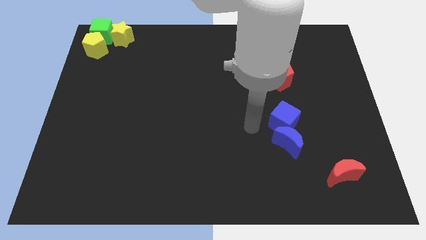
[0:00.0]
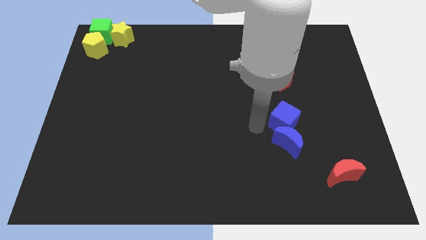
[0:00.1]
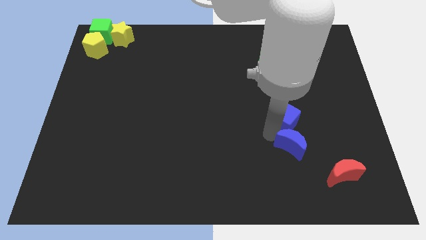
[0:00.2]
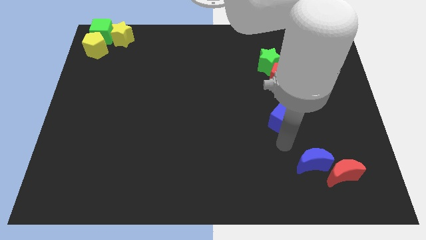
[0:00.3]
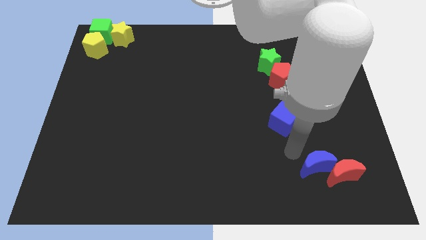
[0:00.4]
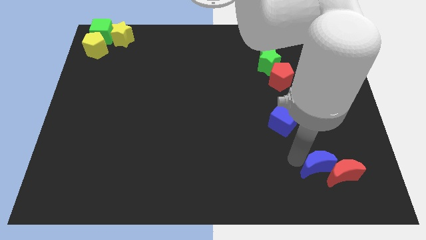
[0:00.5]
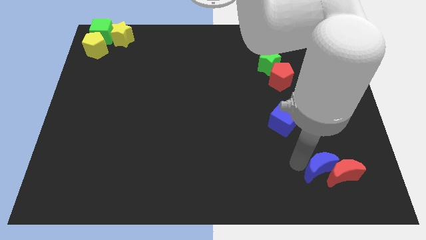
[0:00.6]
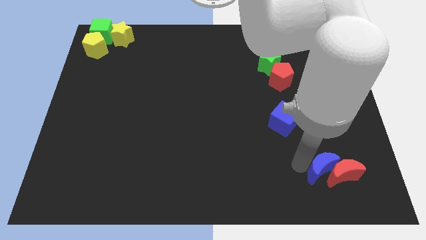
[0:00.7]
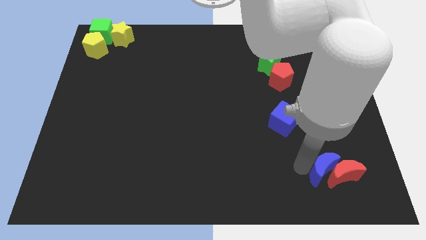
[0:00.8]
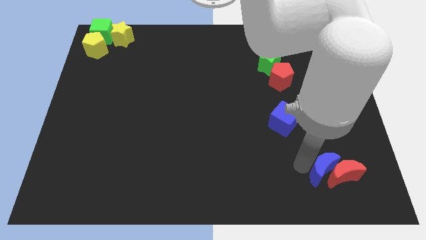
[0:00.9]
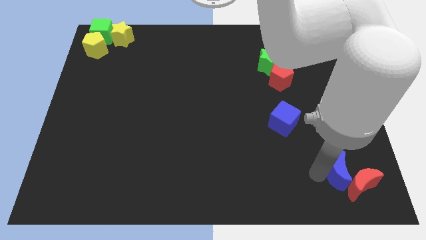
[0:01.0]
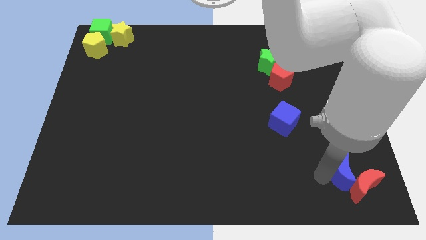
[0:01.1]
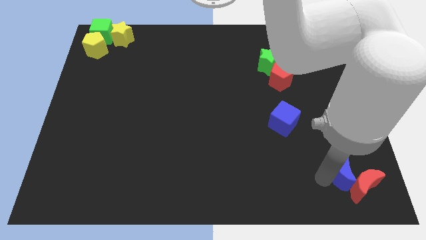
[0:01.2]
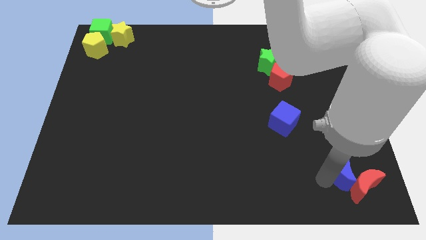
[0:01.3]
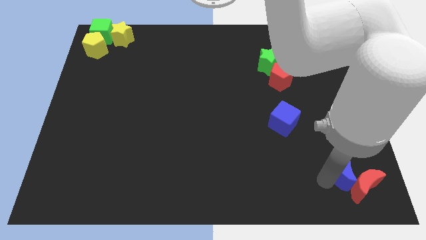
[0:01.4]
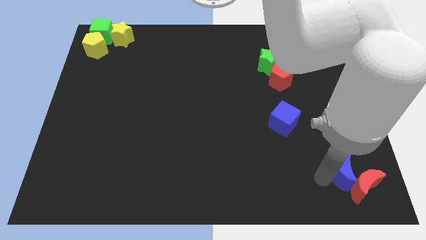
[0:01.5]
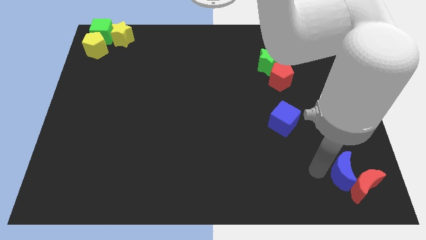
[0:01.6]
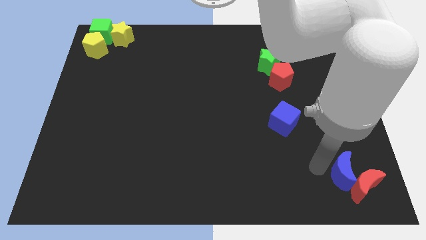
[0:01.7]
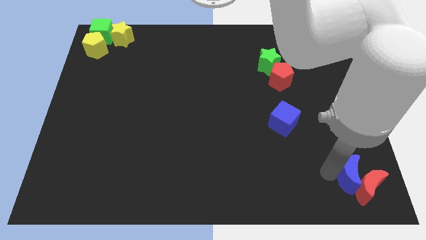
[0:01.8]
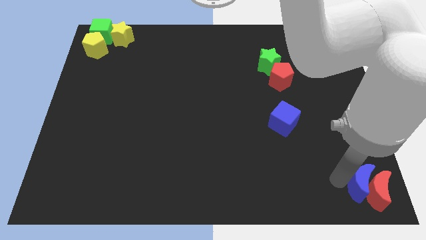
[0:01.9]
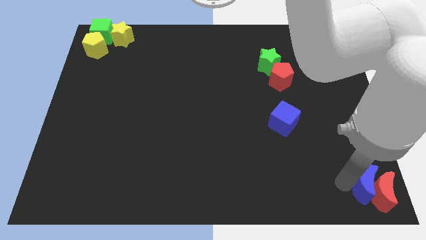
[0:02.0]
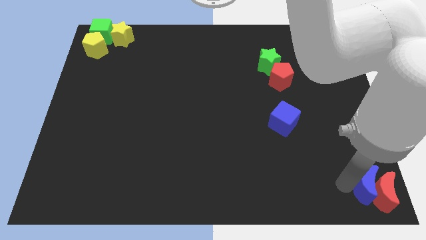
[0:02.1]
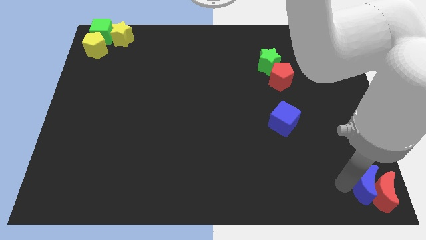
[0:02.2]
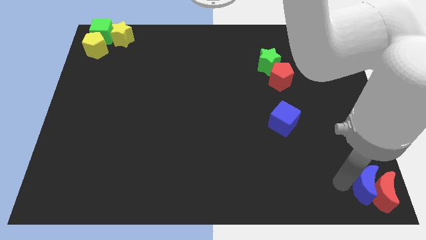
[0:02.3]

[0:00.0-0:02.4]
push blue crescent towards bottom right corner

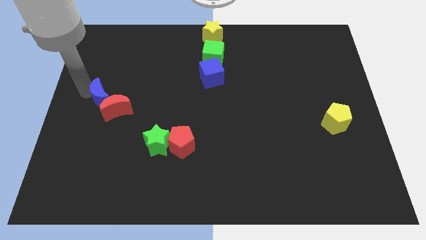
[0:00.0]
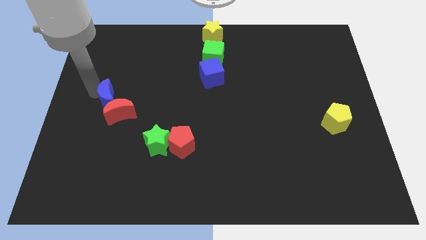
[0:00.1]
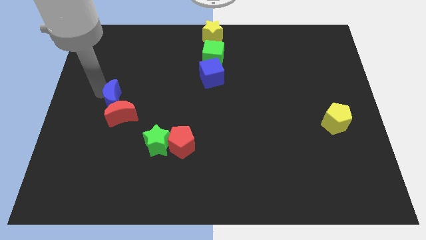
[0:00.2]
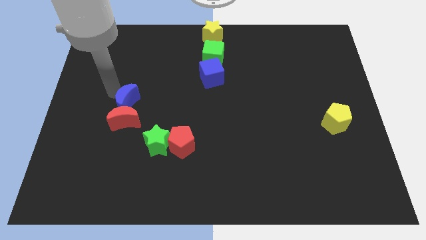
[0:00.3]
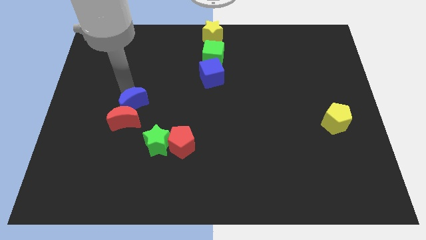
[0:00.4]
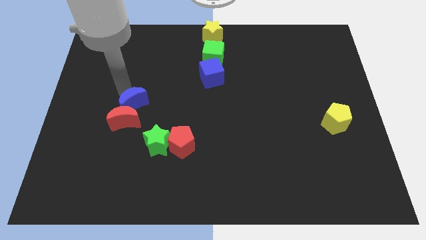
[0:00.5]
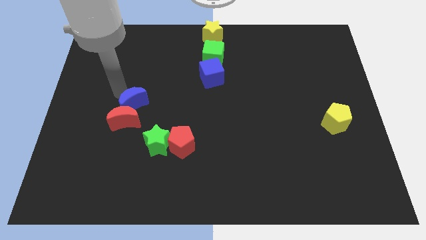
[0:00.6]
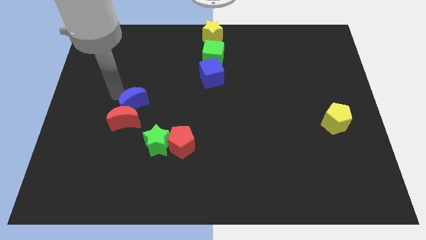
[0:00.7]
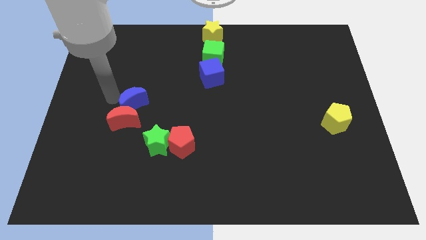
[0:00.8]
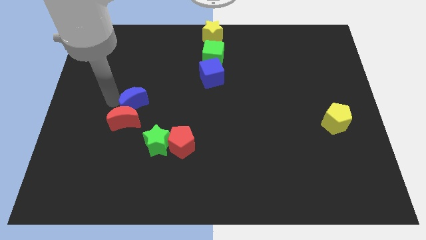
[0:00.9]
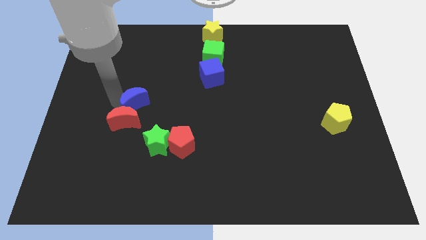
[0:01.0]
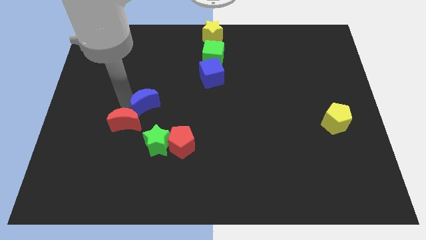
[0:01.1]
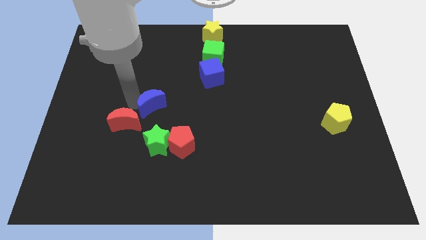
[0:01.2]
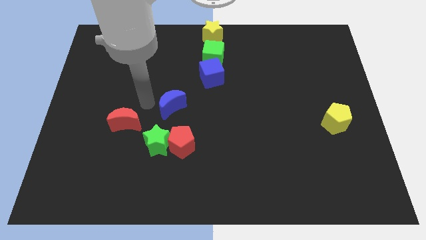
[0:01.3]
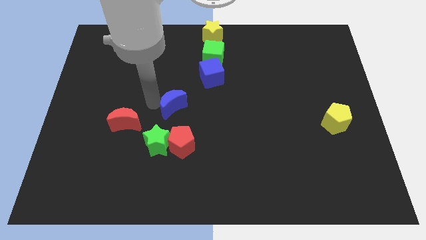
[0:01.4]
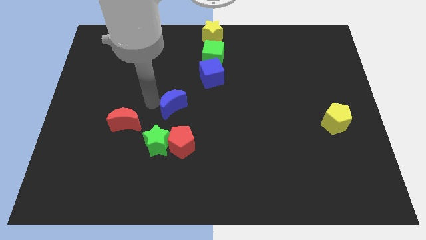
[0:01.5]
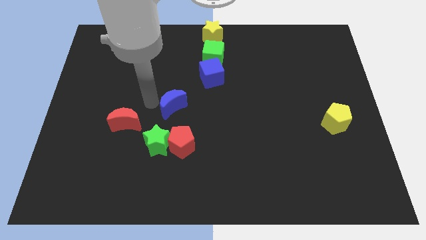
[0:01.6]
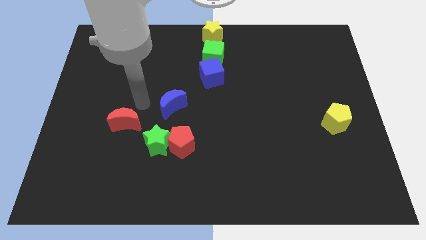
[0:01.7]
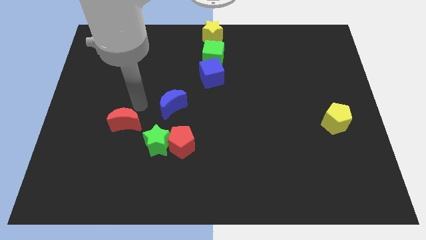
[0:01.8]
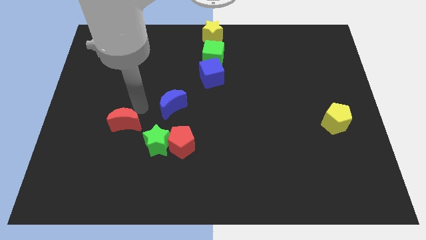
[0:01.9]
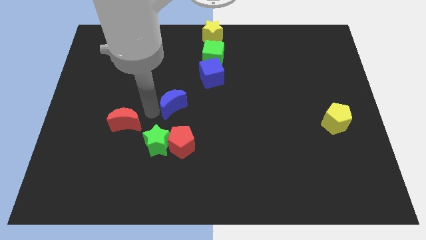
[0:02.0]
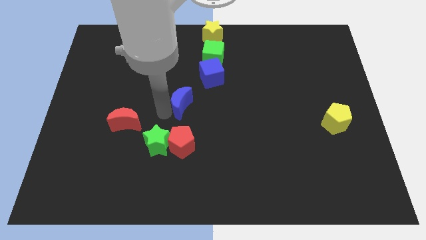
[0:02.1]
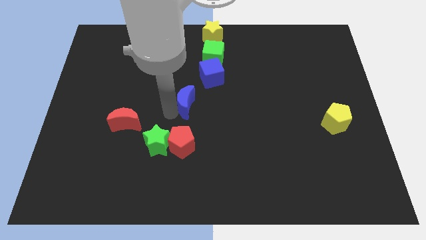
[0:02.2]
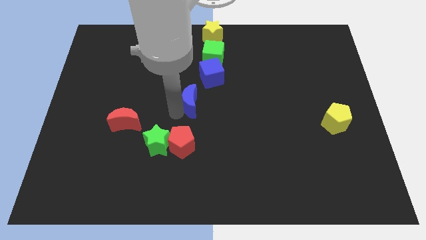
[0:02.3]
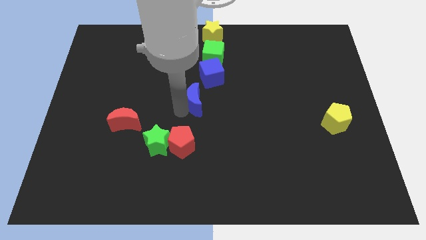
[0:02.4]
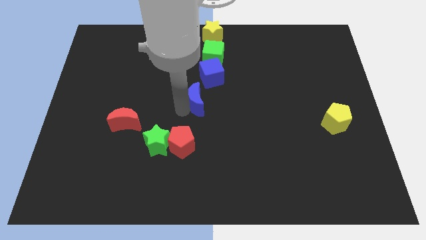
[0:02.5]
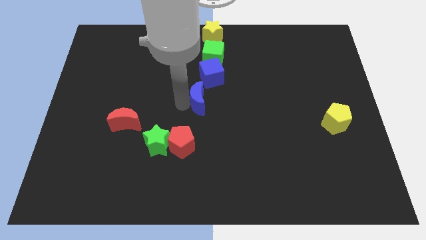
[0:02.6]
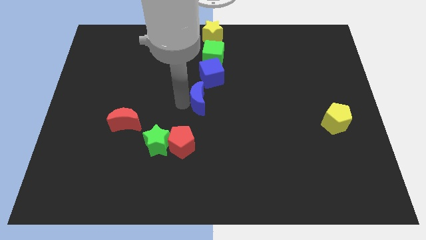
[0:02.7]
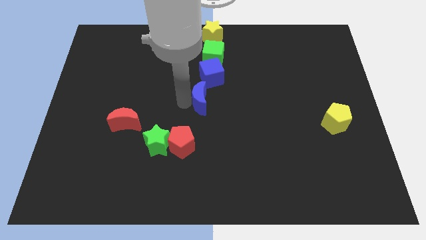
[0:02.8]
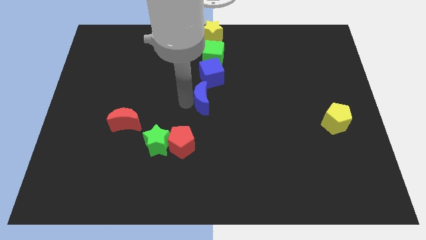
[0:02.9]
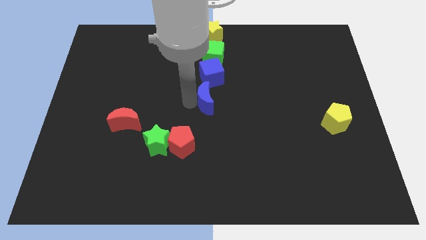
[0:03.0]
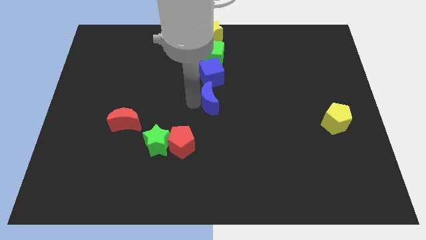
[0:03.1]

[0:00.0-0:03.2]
separate blue moon from red moon

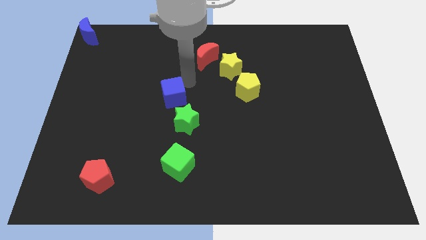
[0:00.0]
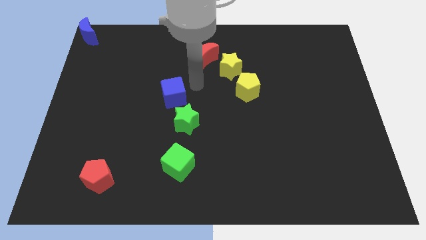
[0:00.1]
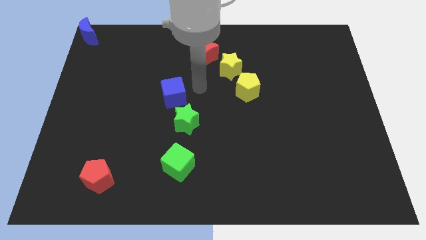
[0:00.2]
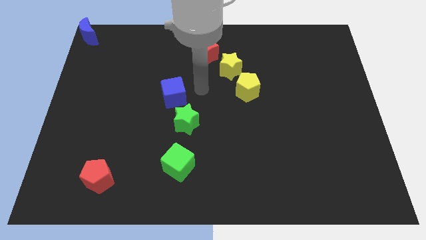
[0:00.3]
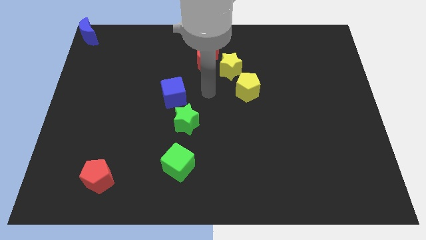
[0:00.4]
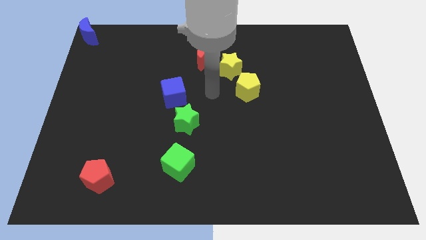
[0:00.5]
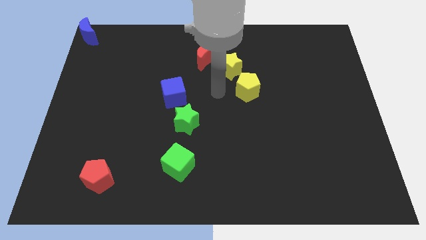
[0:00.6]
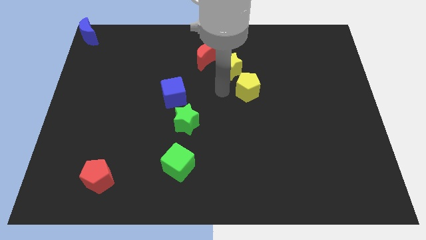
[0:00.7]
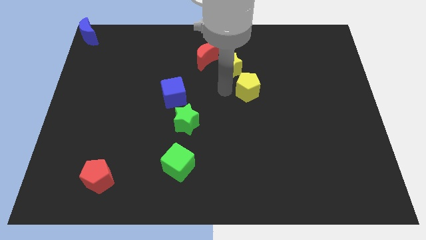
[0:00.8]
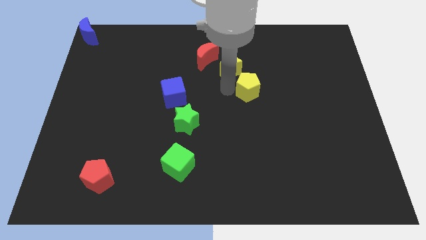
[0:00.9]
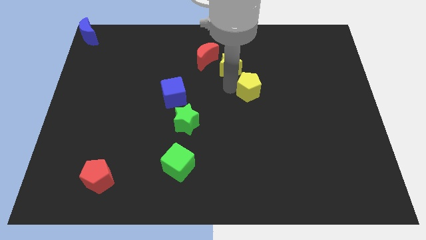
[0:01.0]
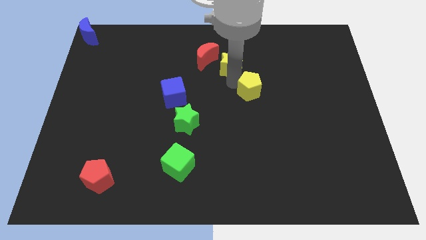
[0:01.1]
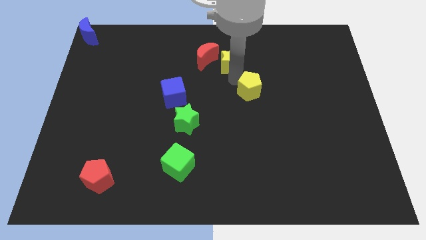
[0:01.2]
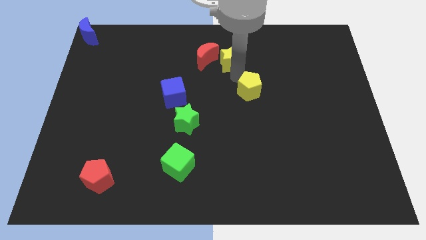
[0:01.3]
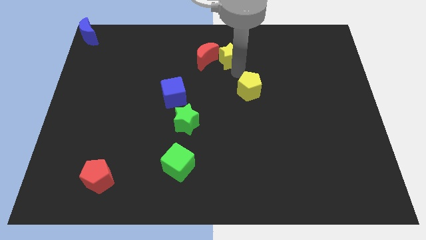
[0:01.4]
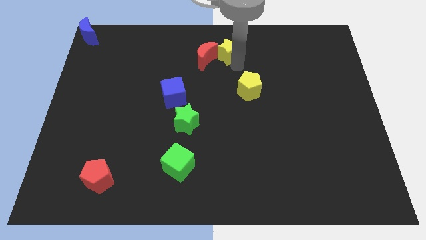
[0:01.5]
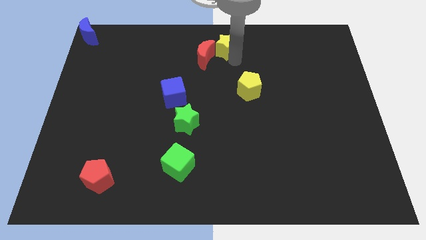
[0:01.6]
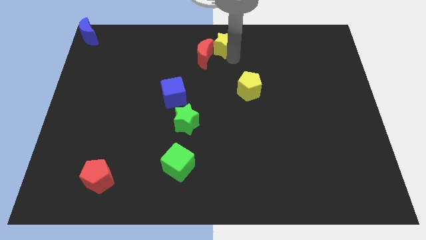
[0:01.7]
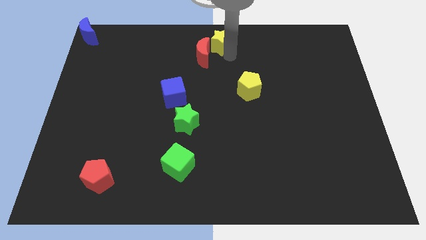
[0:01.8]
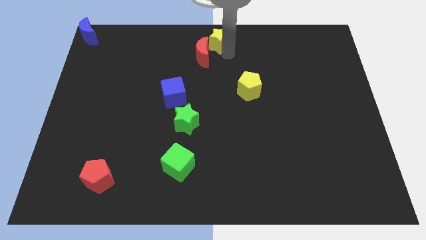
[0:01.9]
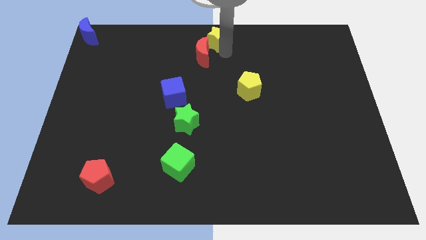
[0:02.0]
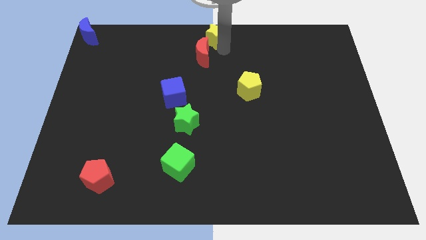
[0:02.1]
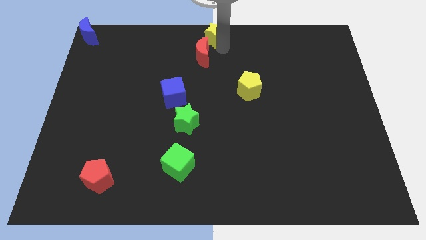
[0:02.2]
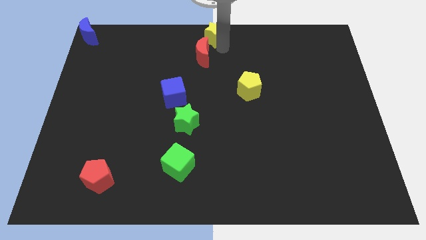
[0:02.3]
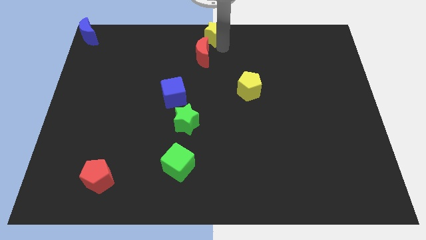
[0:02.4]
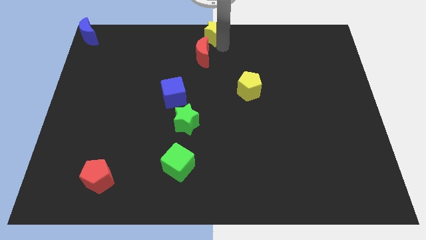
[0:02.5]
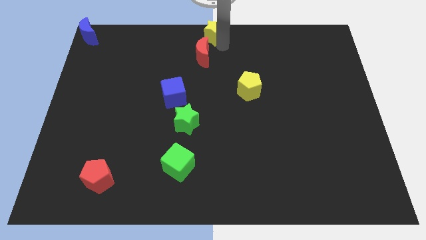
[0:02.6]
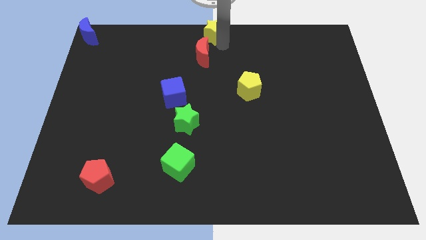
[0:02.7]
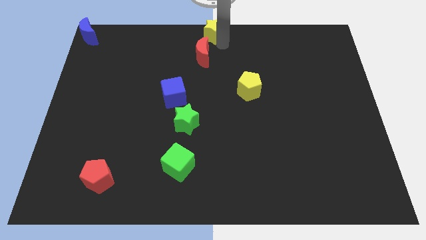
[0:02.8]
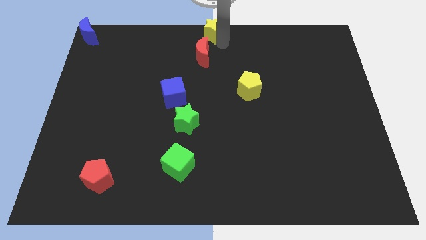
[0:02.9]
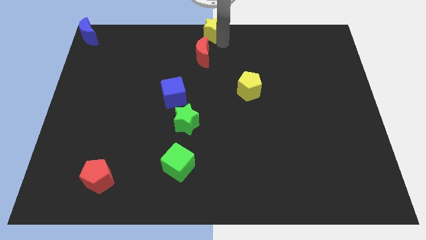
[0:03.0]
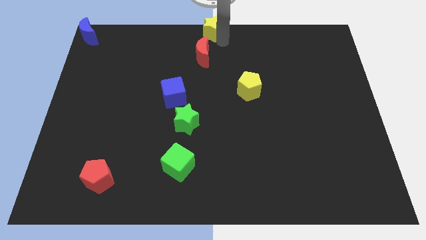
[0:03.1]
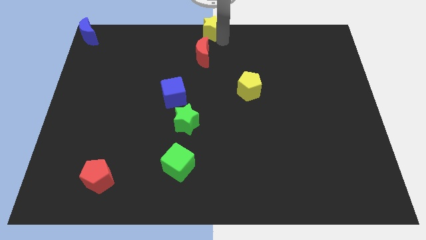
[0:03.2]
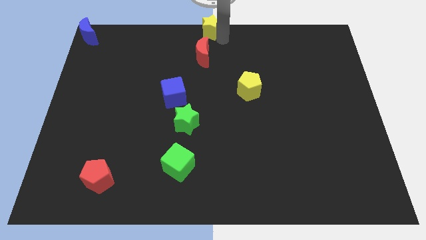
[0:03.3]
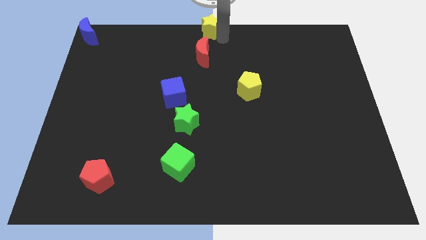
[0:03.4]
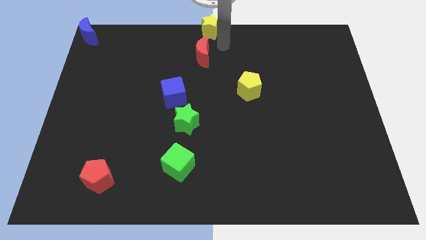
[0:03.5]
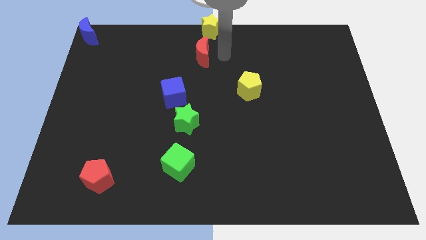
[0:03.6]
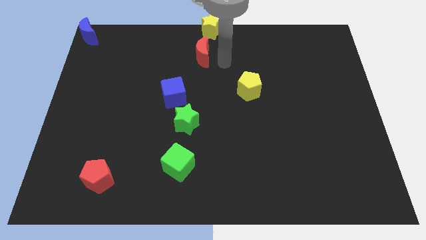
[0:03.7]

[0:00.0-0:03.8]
separate the yellow star from the yellow pentagon
